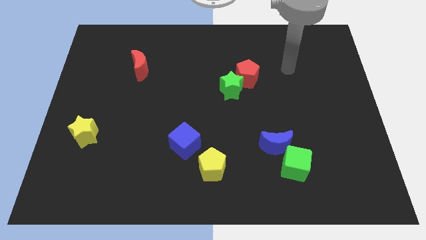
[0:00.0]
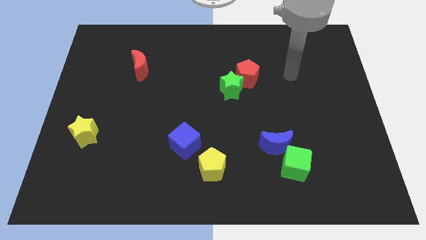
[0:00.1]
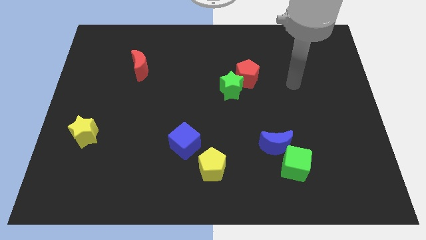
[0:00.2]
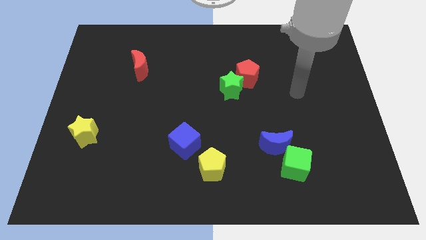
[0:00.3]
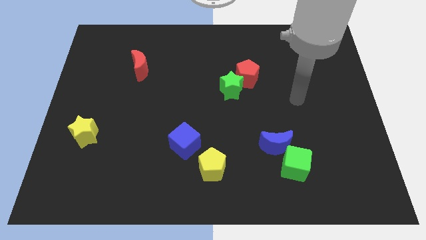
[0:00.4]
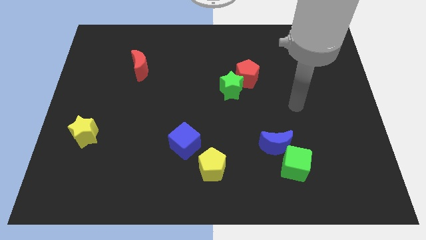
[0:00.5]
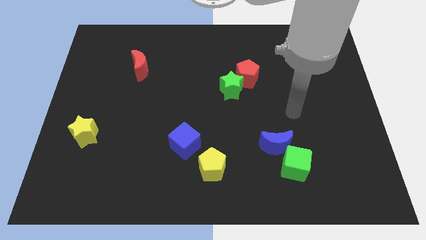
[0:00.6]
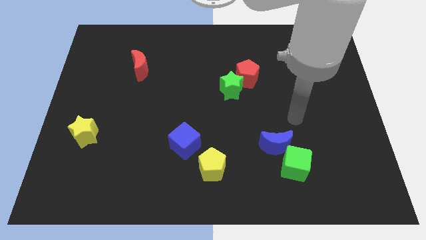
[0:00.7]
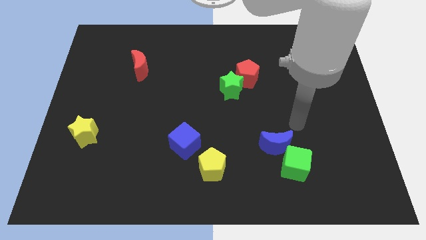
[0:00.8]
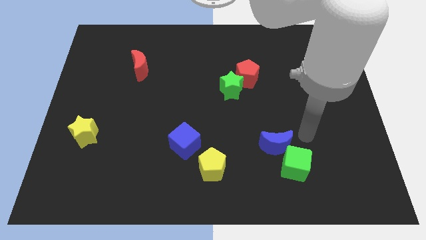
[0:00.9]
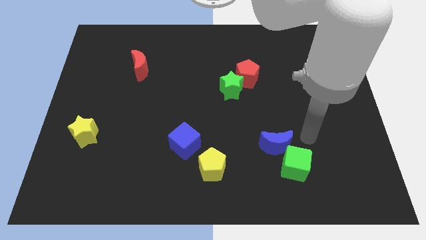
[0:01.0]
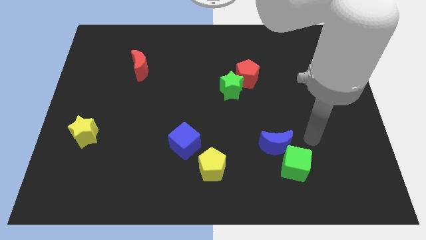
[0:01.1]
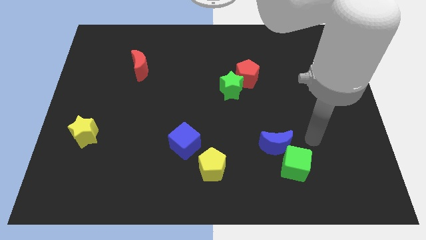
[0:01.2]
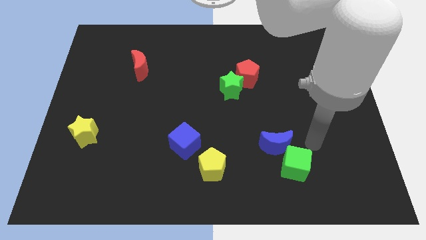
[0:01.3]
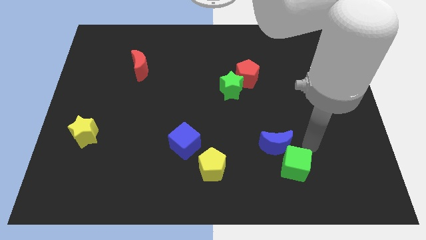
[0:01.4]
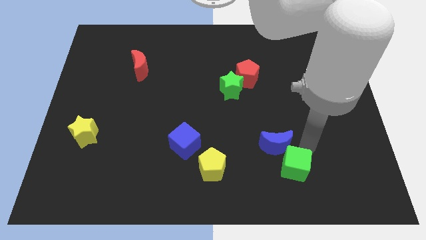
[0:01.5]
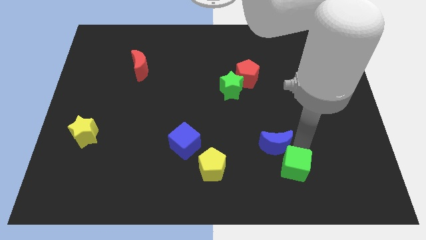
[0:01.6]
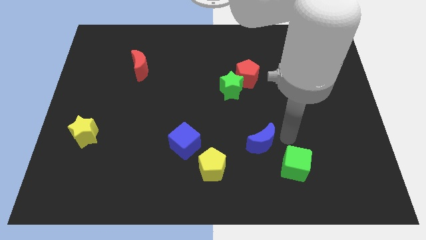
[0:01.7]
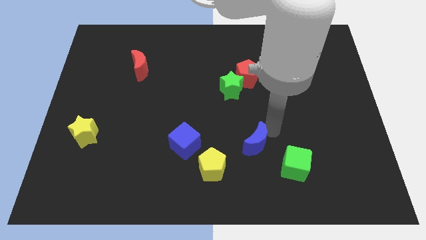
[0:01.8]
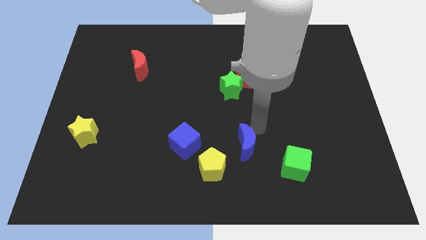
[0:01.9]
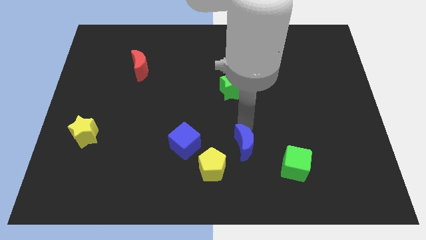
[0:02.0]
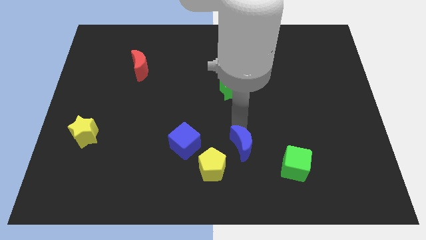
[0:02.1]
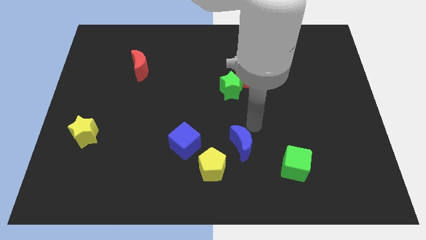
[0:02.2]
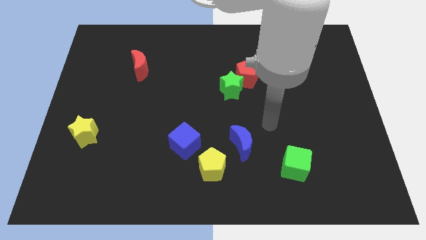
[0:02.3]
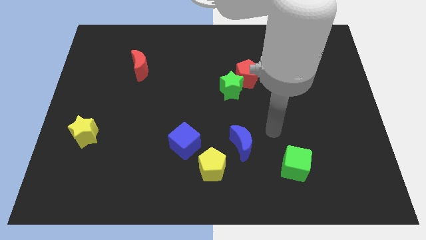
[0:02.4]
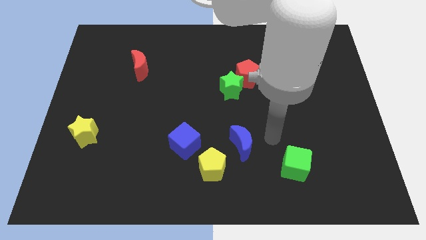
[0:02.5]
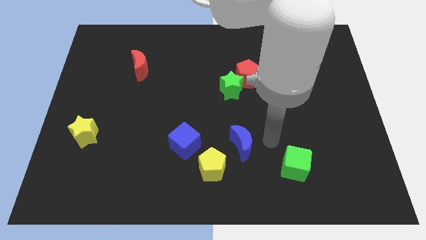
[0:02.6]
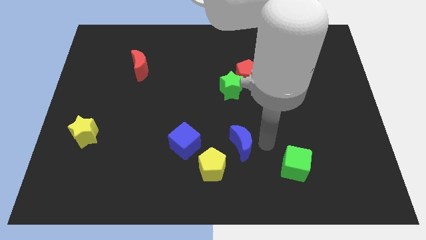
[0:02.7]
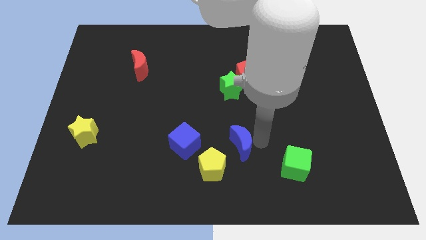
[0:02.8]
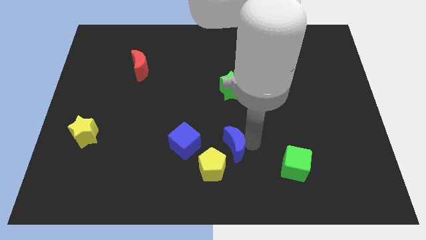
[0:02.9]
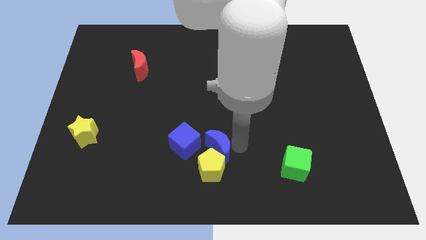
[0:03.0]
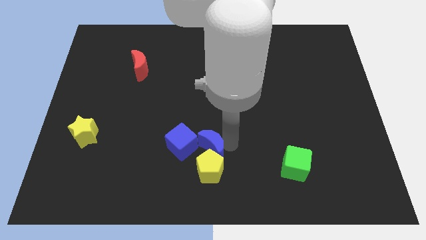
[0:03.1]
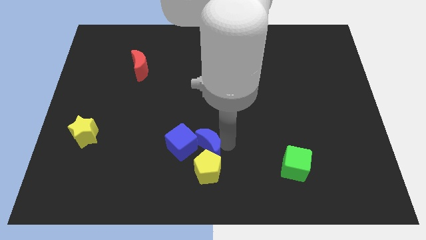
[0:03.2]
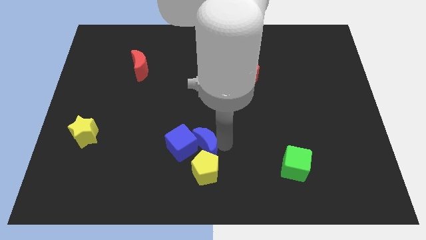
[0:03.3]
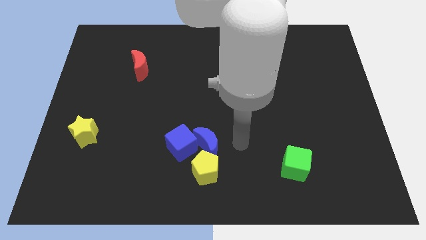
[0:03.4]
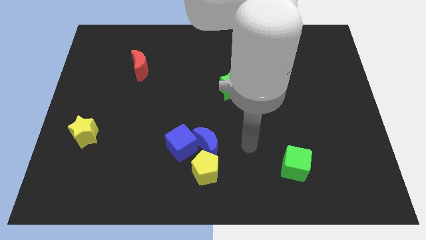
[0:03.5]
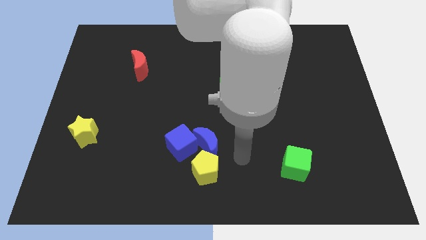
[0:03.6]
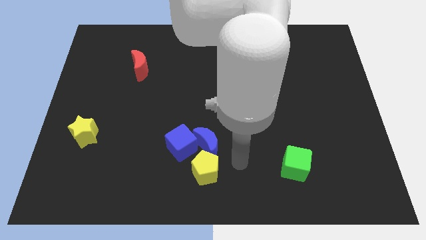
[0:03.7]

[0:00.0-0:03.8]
move the blue moon slightly to the left

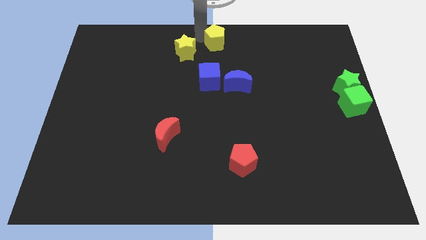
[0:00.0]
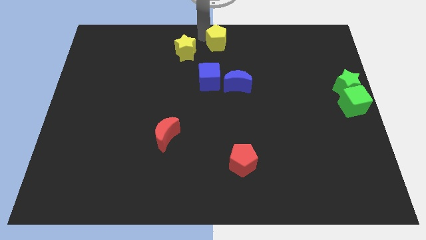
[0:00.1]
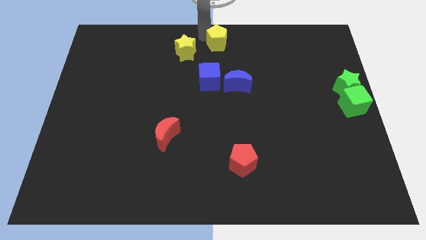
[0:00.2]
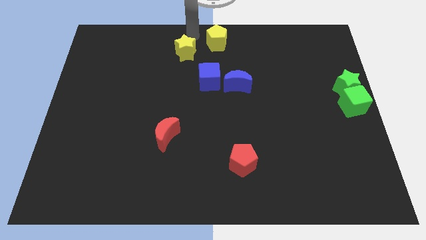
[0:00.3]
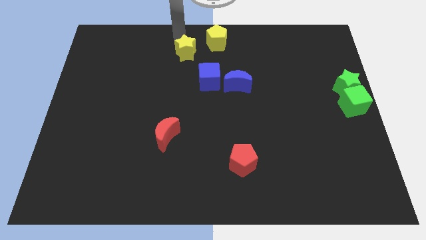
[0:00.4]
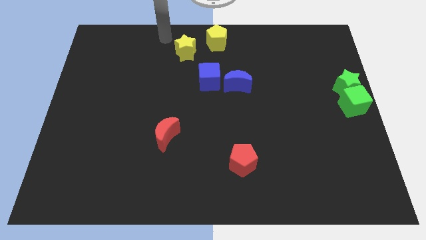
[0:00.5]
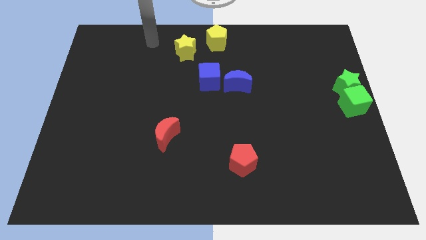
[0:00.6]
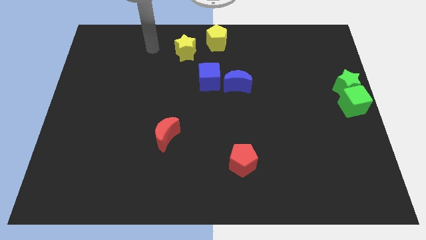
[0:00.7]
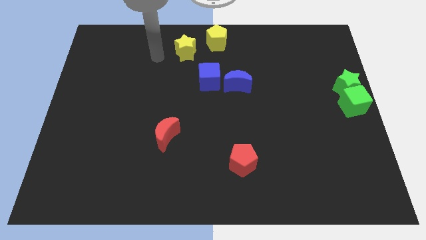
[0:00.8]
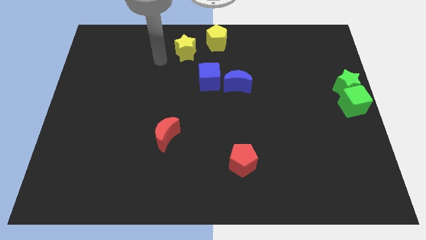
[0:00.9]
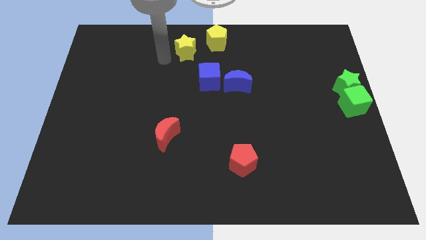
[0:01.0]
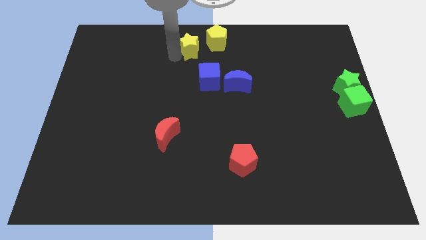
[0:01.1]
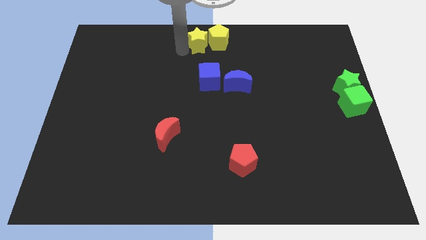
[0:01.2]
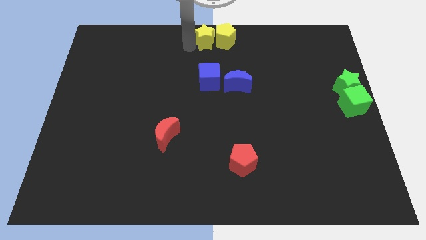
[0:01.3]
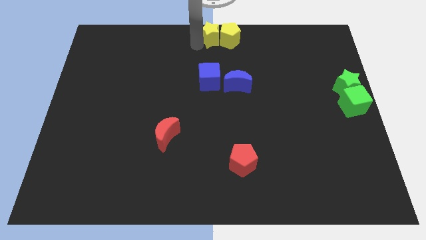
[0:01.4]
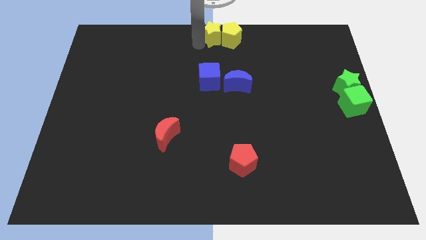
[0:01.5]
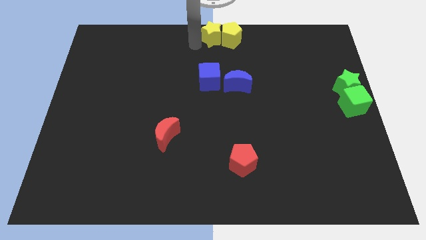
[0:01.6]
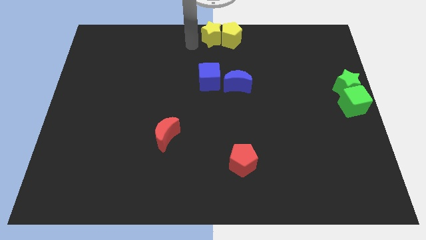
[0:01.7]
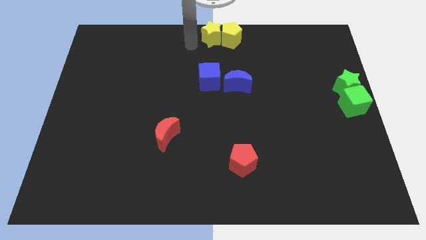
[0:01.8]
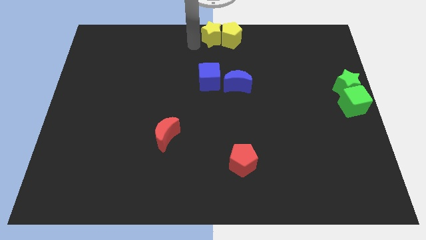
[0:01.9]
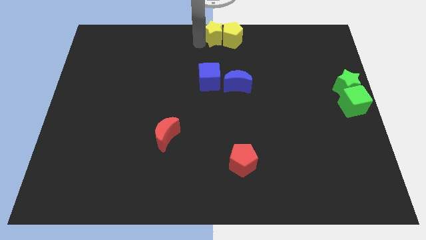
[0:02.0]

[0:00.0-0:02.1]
push the yellow star and yellow pentagon to the top center of the board

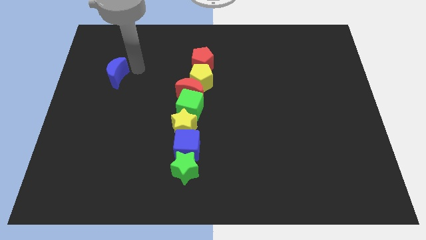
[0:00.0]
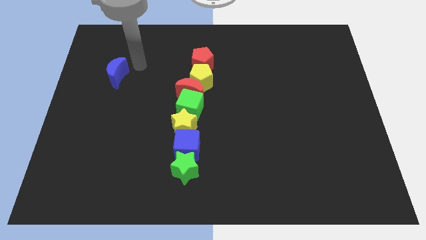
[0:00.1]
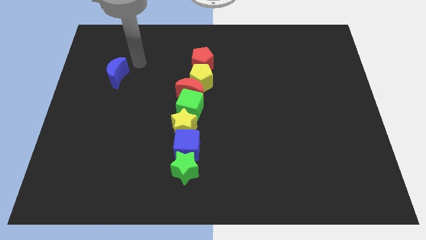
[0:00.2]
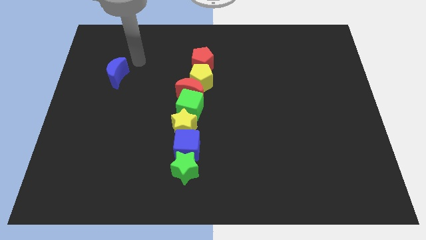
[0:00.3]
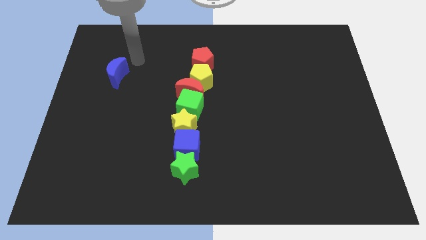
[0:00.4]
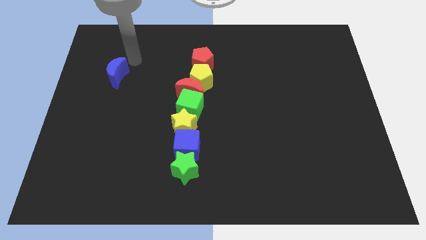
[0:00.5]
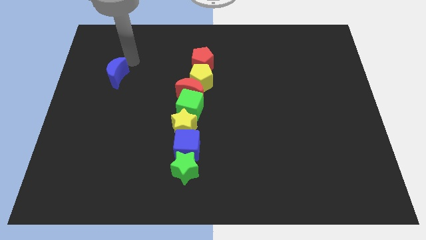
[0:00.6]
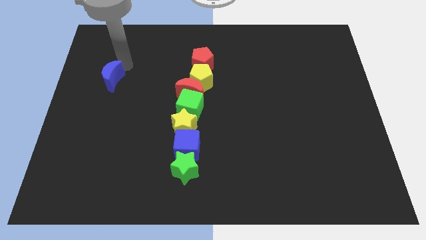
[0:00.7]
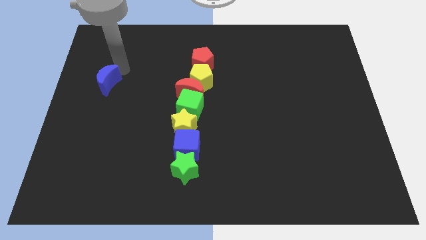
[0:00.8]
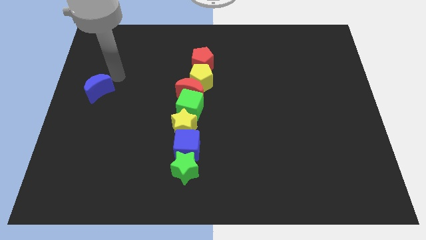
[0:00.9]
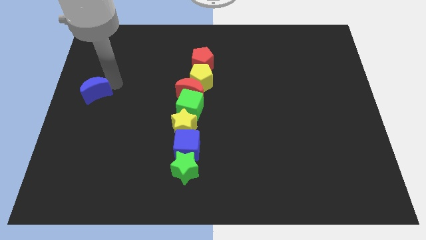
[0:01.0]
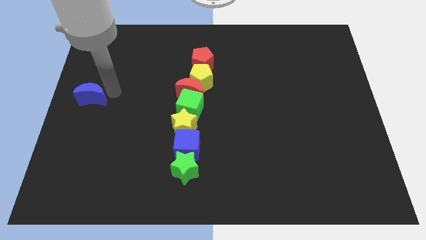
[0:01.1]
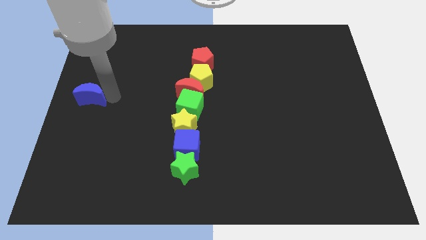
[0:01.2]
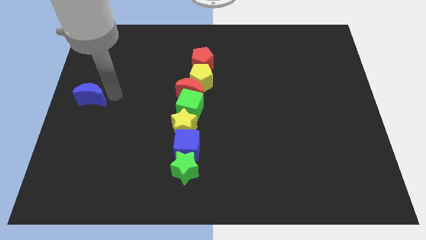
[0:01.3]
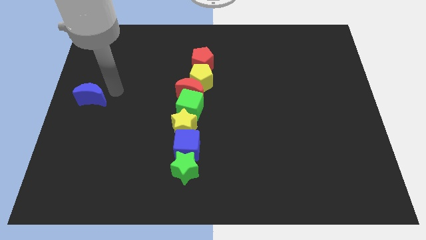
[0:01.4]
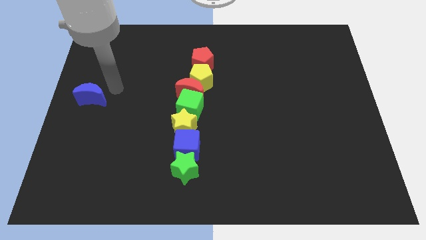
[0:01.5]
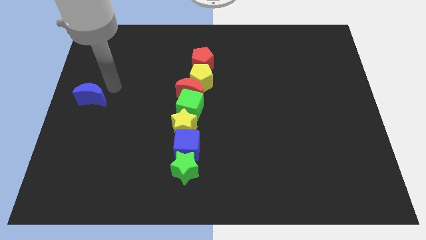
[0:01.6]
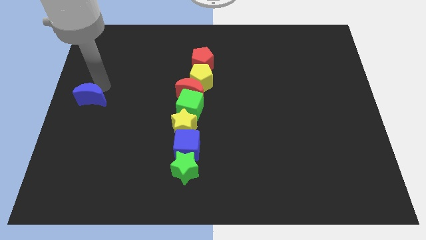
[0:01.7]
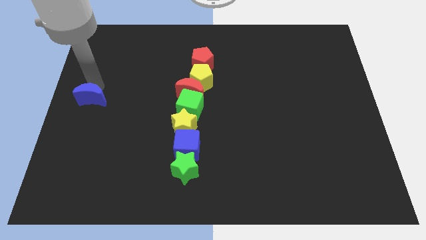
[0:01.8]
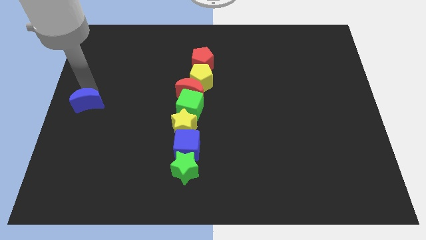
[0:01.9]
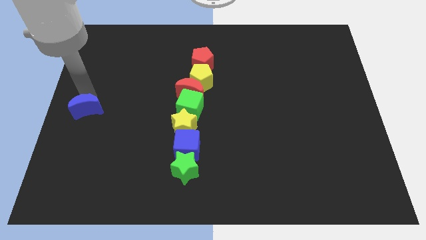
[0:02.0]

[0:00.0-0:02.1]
place the blue moon in parallel with the green cube

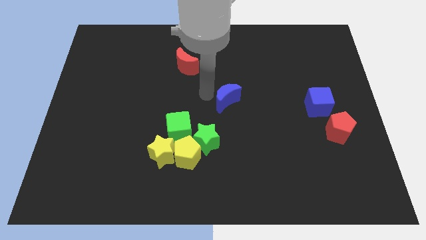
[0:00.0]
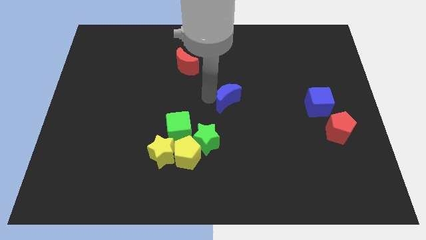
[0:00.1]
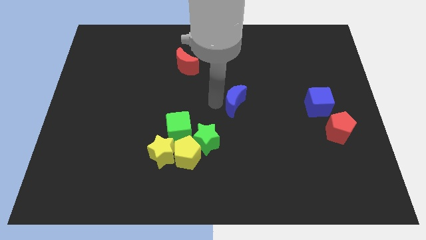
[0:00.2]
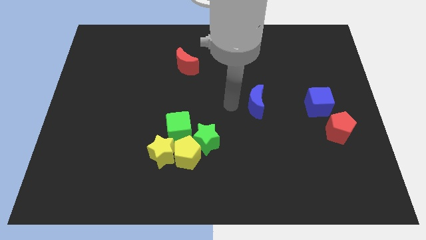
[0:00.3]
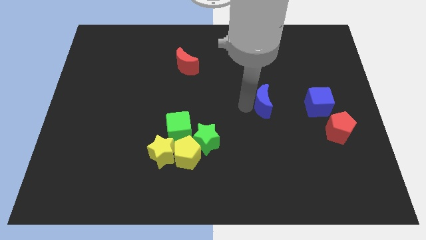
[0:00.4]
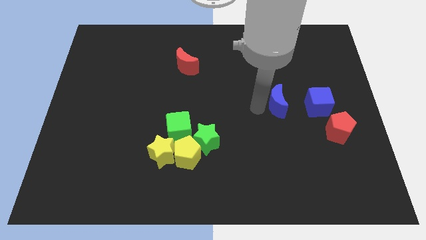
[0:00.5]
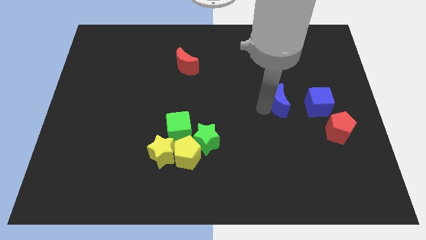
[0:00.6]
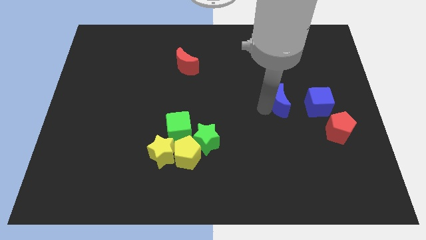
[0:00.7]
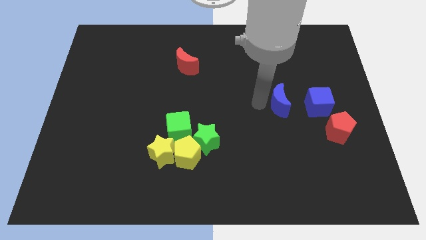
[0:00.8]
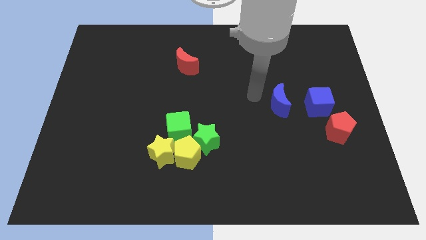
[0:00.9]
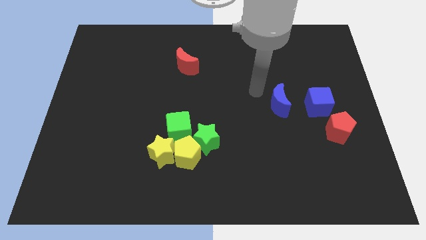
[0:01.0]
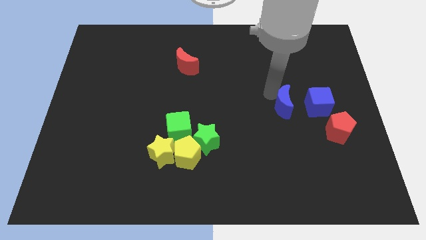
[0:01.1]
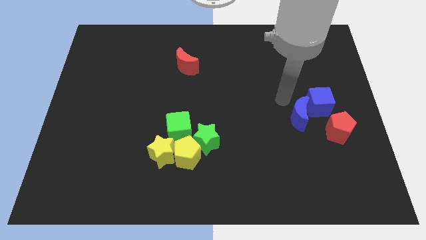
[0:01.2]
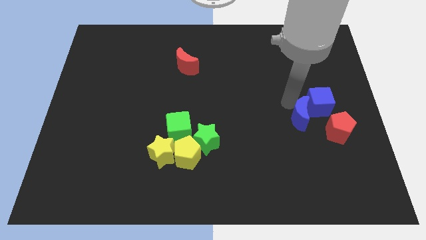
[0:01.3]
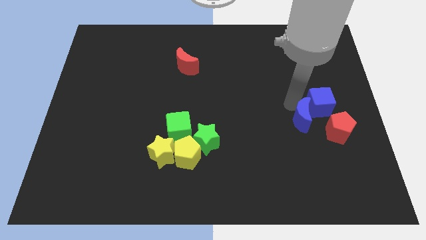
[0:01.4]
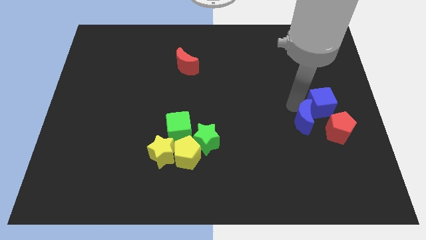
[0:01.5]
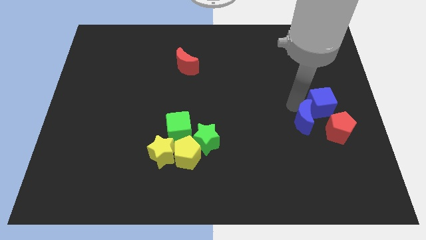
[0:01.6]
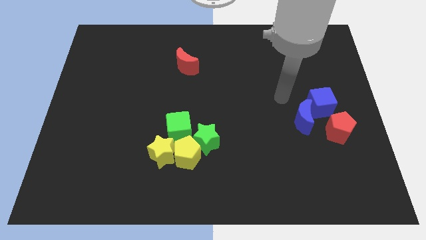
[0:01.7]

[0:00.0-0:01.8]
move the blue crescent into the left side of the blue cube
